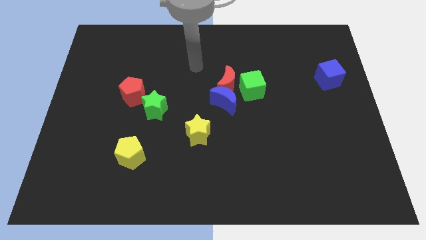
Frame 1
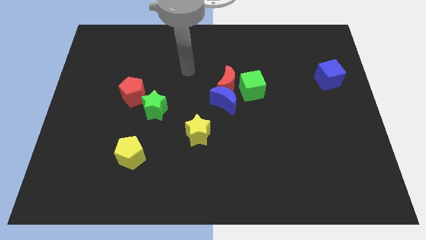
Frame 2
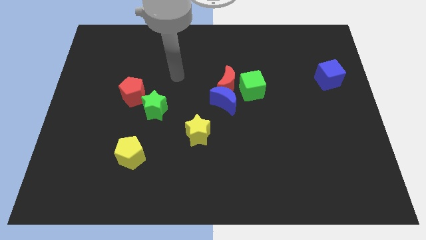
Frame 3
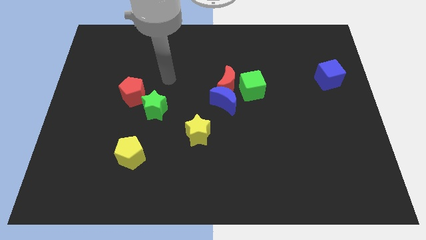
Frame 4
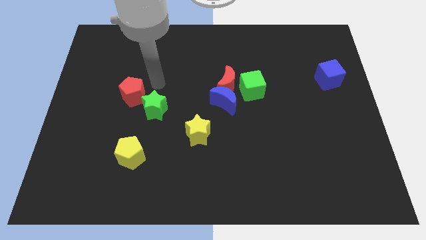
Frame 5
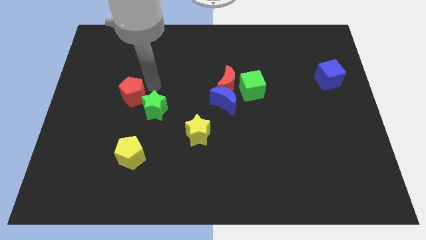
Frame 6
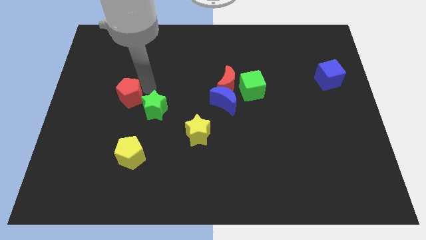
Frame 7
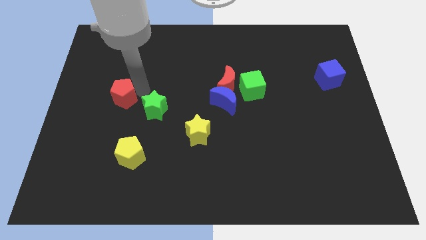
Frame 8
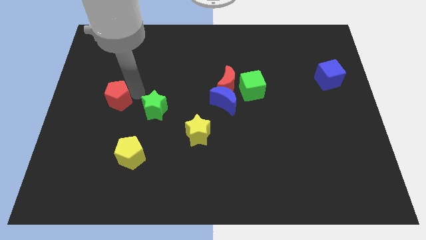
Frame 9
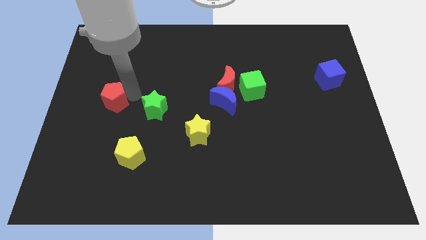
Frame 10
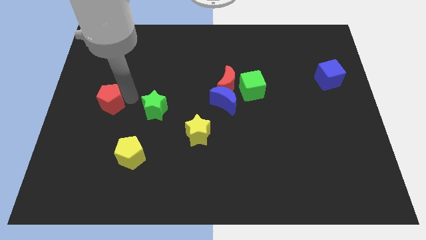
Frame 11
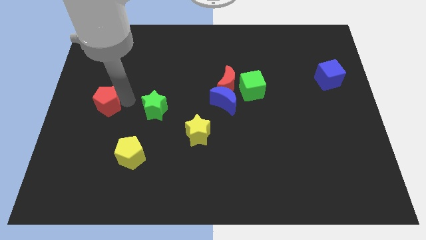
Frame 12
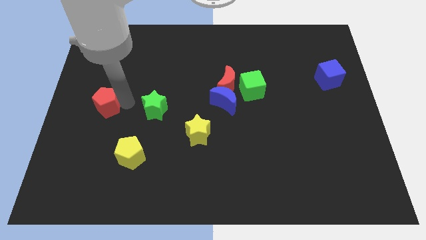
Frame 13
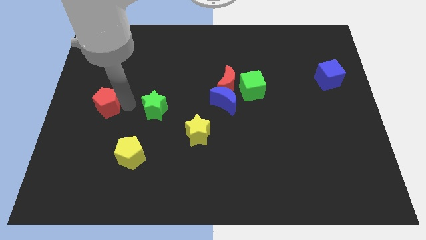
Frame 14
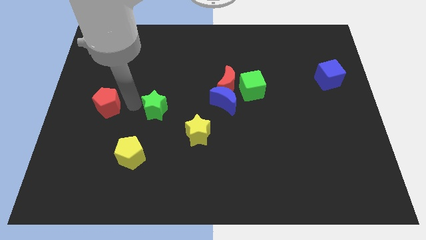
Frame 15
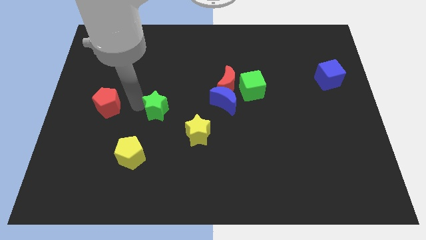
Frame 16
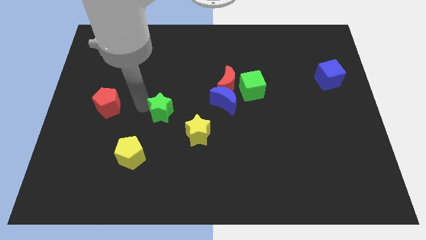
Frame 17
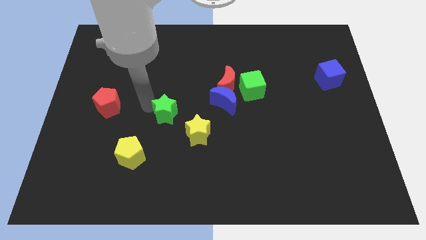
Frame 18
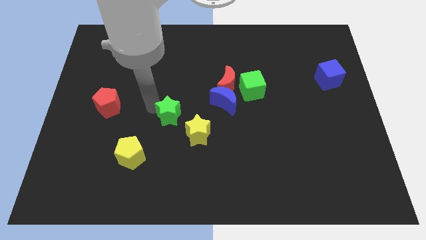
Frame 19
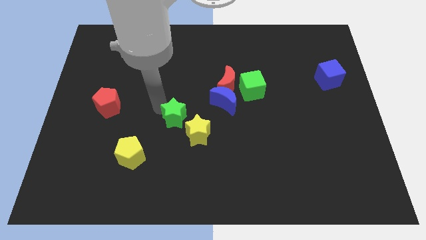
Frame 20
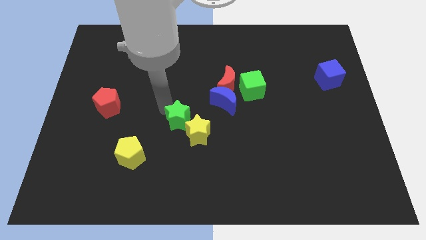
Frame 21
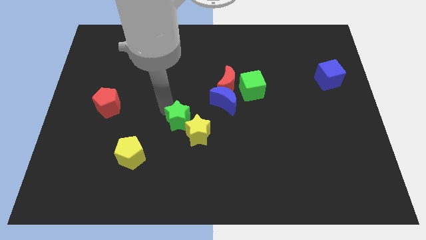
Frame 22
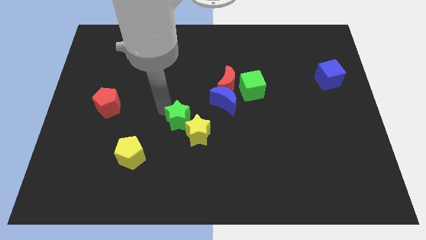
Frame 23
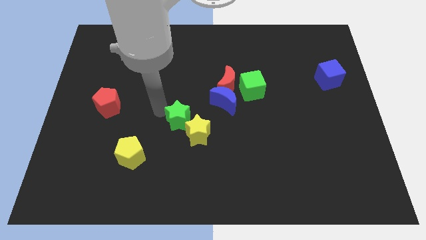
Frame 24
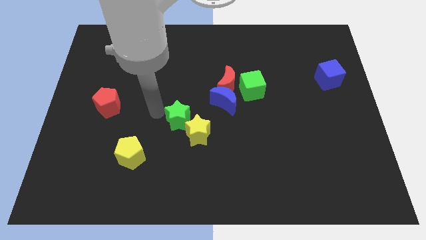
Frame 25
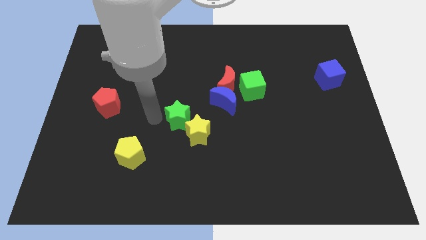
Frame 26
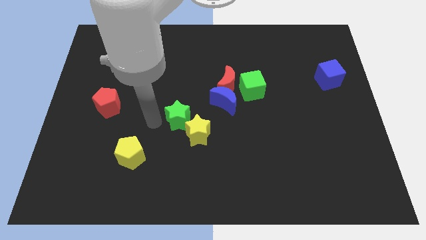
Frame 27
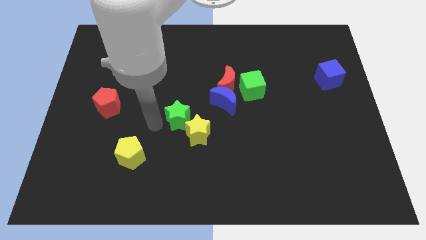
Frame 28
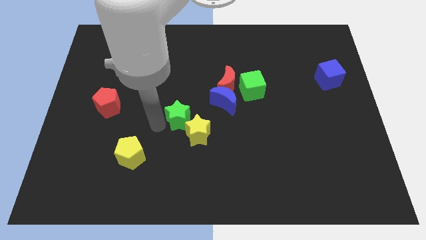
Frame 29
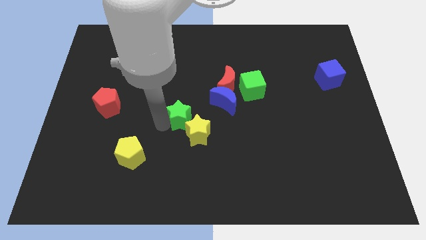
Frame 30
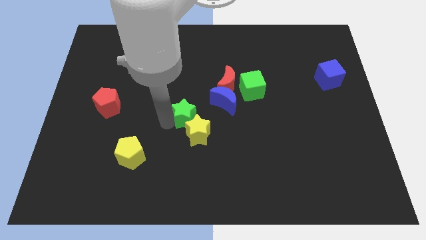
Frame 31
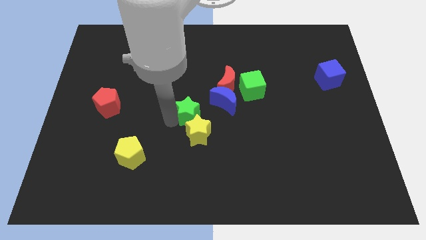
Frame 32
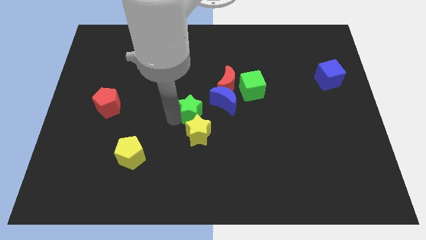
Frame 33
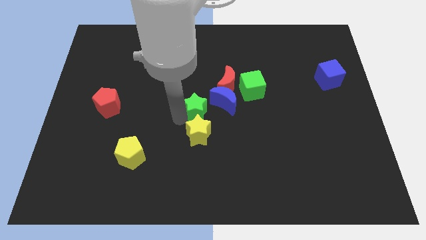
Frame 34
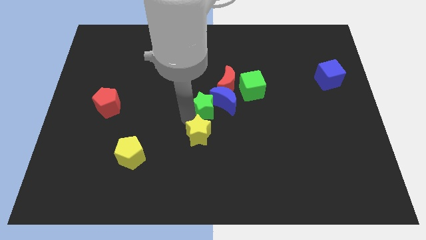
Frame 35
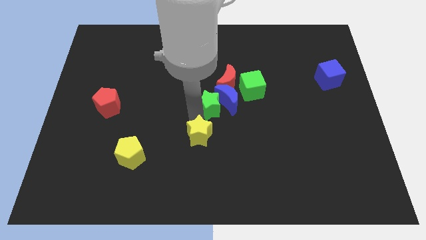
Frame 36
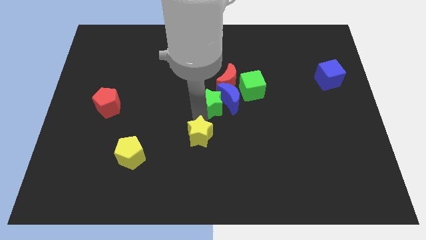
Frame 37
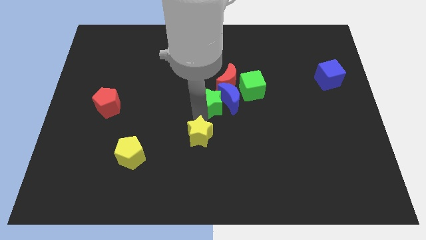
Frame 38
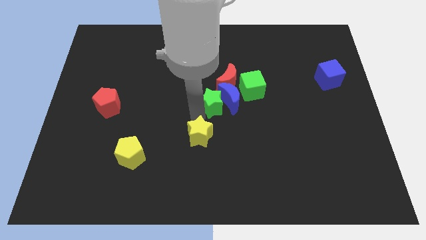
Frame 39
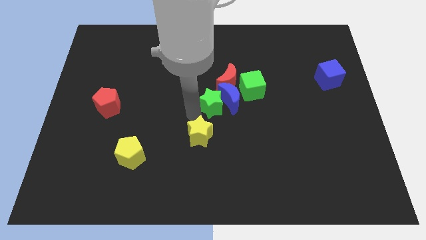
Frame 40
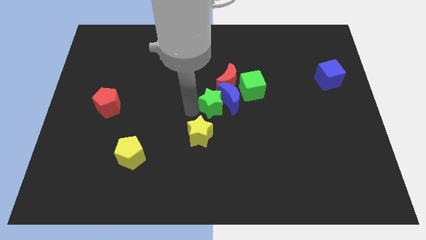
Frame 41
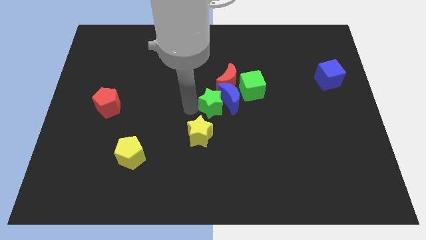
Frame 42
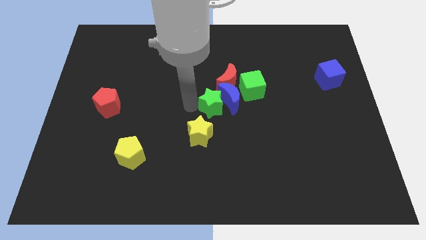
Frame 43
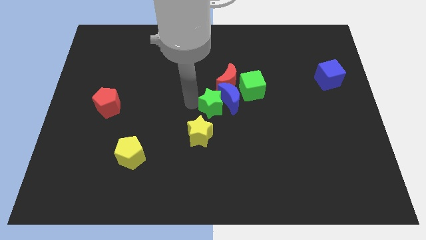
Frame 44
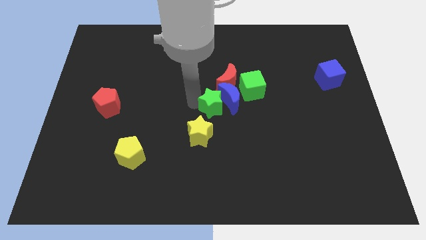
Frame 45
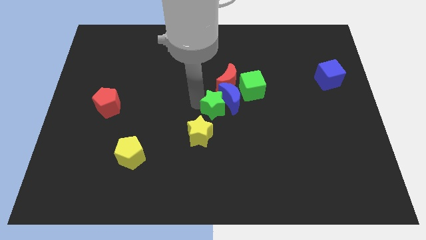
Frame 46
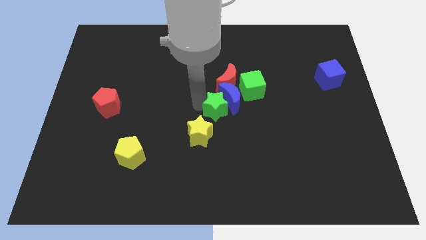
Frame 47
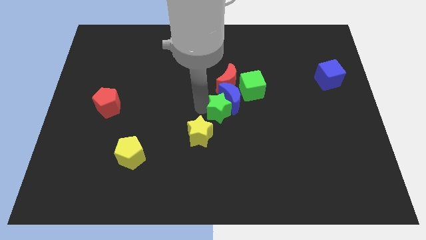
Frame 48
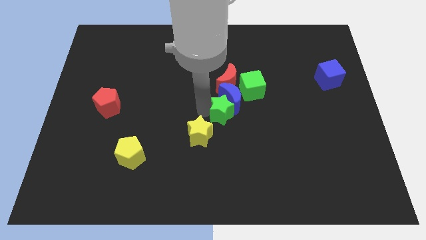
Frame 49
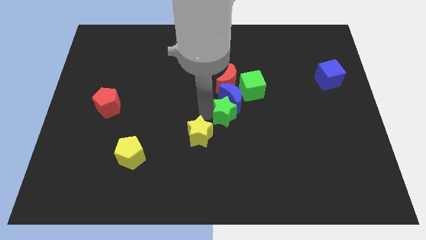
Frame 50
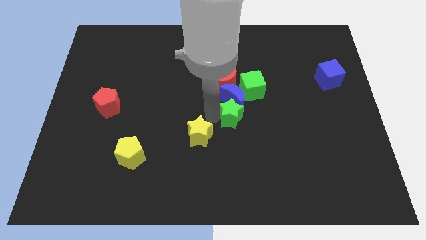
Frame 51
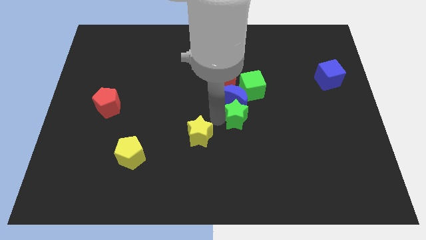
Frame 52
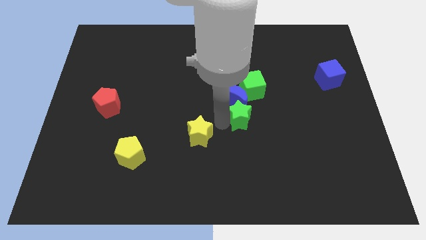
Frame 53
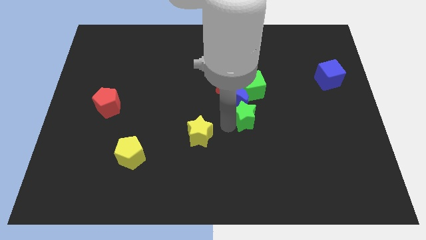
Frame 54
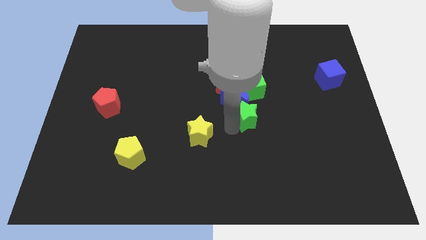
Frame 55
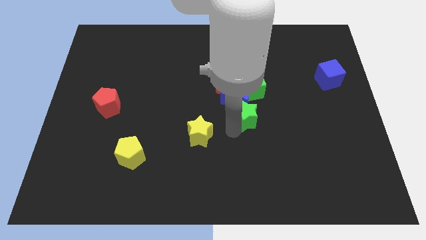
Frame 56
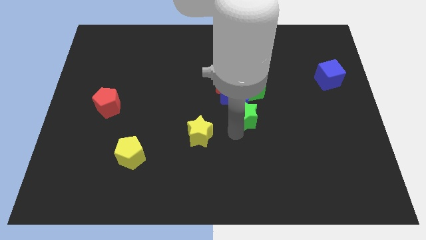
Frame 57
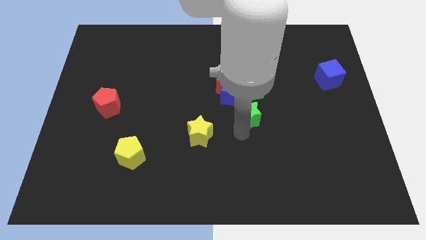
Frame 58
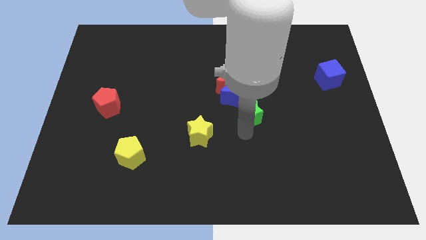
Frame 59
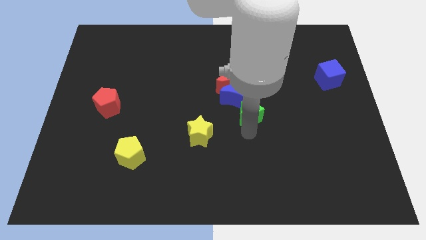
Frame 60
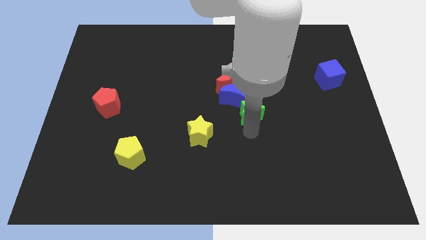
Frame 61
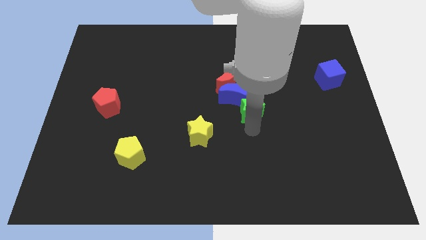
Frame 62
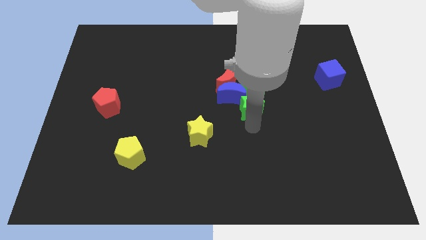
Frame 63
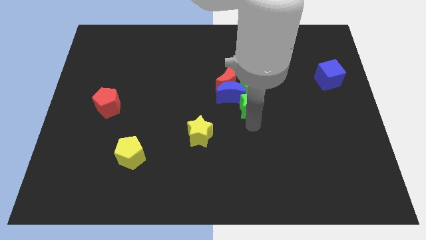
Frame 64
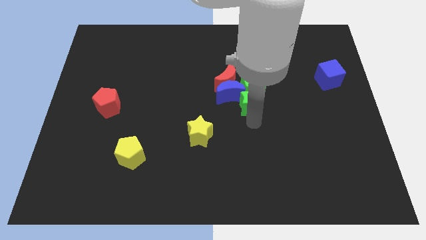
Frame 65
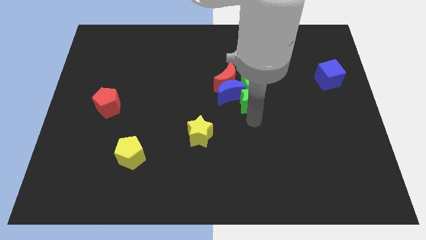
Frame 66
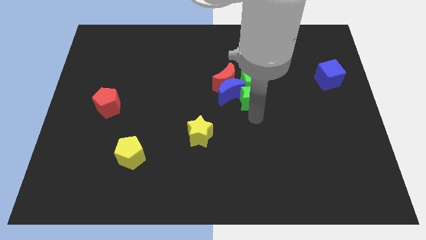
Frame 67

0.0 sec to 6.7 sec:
move the green star close to the green cube

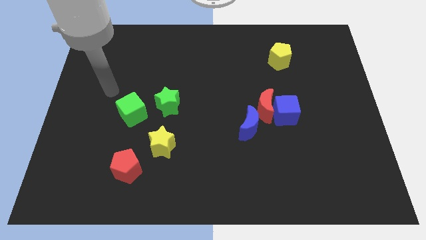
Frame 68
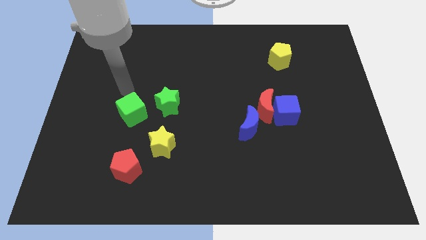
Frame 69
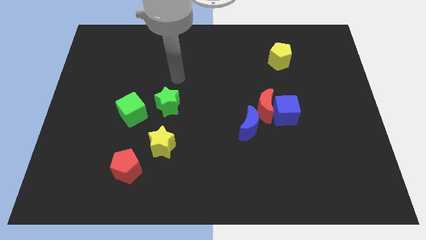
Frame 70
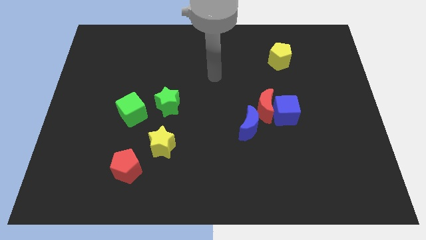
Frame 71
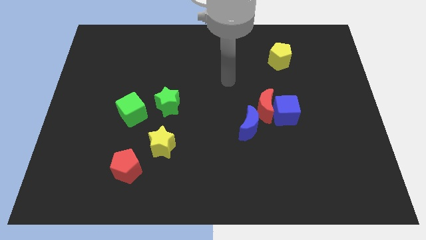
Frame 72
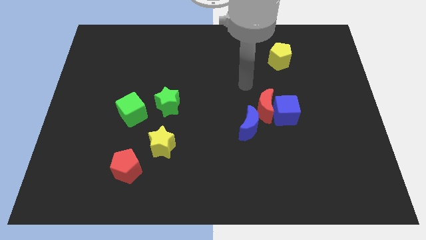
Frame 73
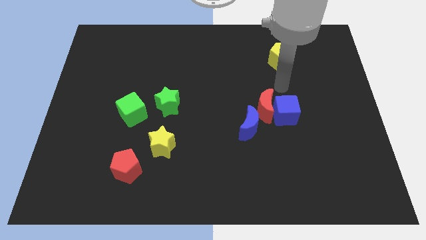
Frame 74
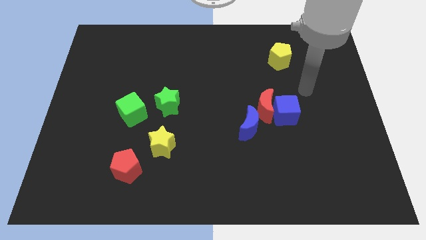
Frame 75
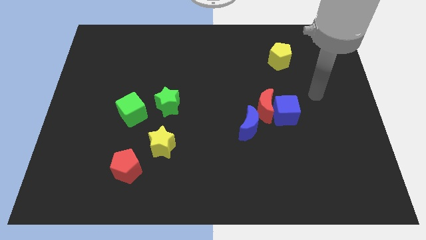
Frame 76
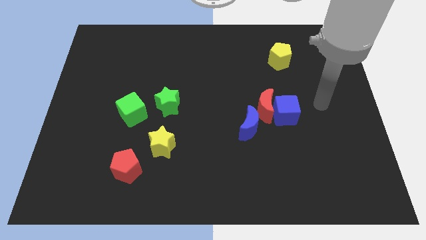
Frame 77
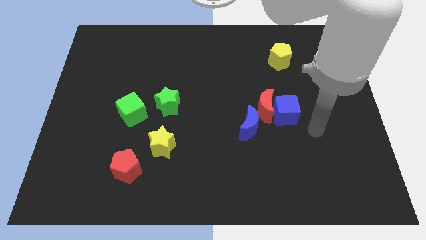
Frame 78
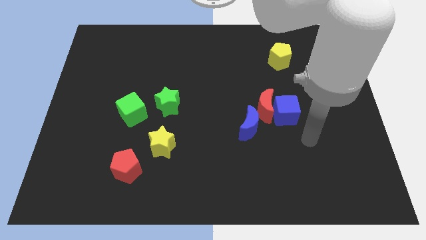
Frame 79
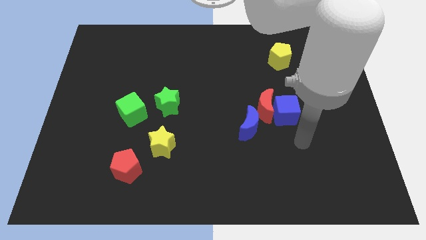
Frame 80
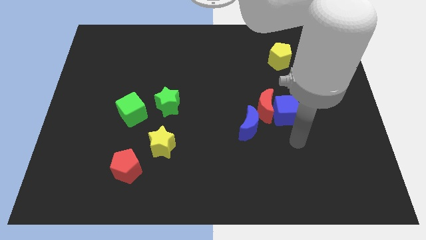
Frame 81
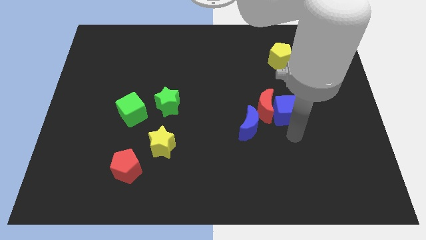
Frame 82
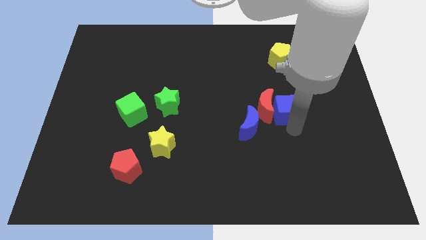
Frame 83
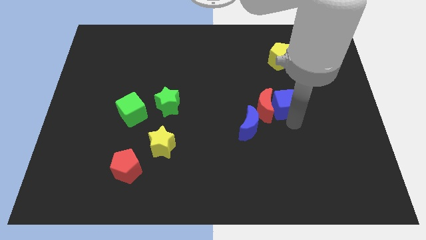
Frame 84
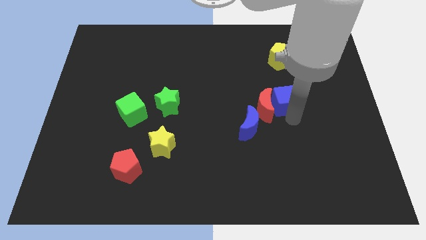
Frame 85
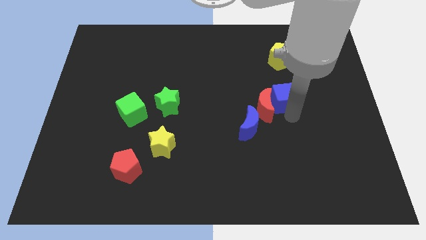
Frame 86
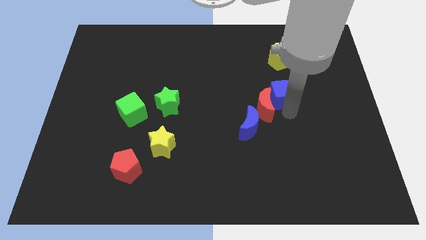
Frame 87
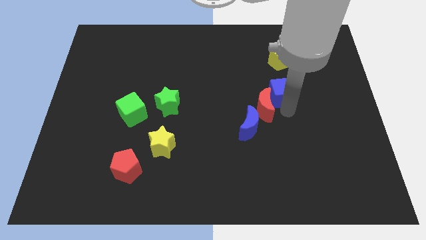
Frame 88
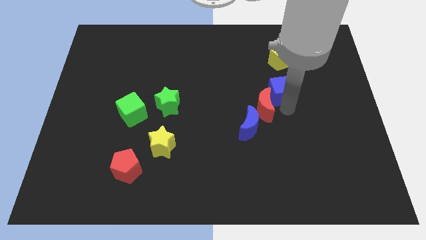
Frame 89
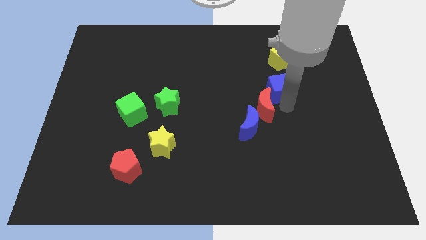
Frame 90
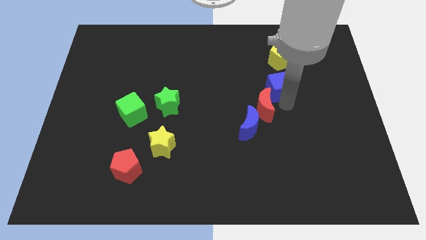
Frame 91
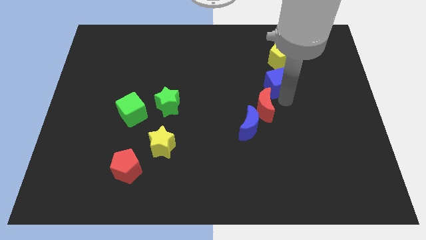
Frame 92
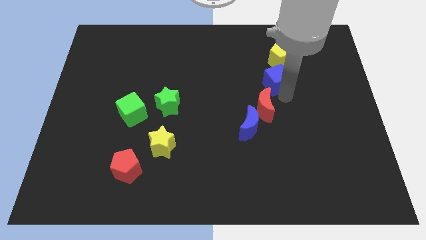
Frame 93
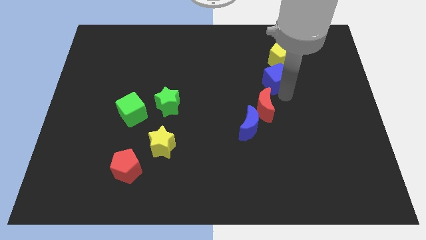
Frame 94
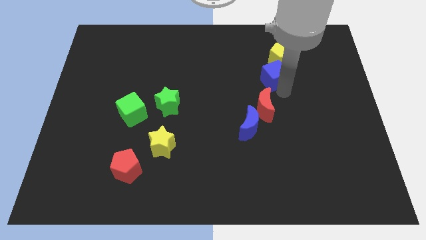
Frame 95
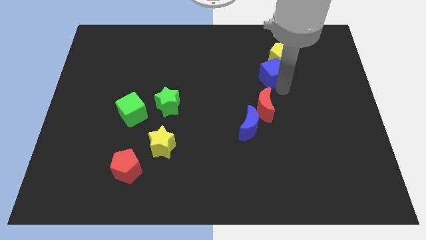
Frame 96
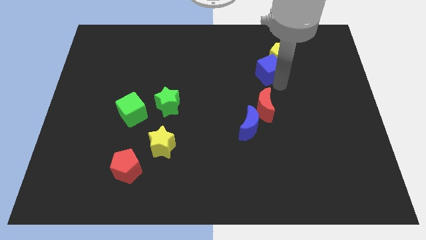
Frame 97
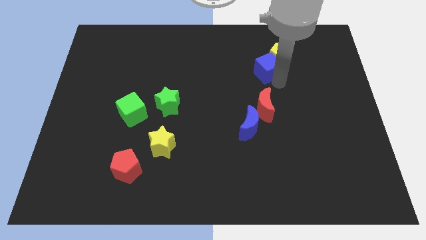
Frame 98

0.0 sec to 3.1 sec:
move the blue cube towards the yellow pentagon
